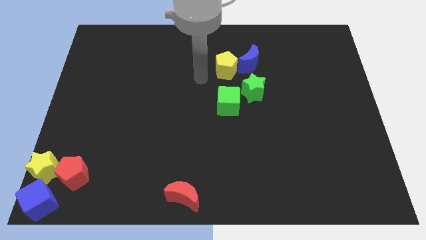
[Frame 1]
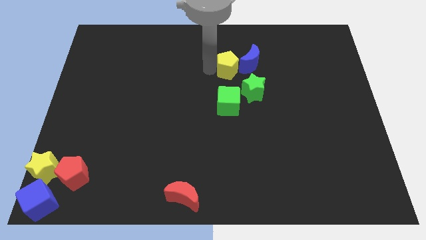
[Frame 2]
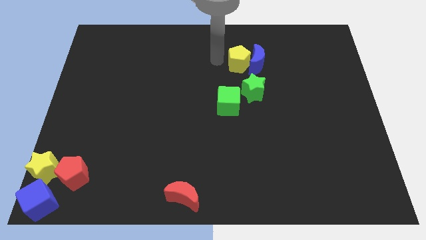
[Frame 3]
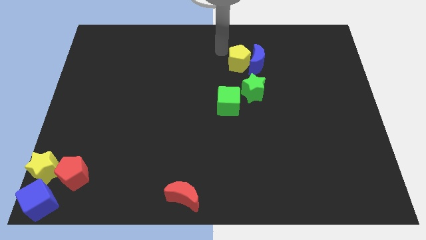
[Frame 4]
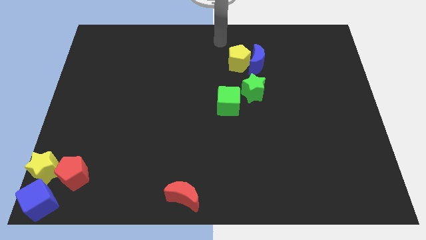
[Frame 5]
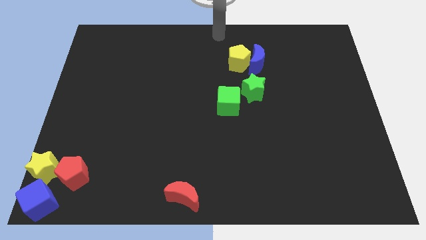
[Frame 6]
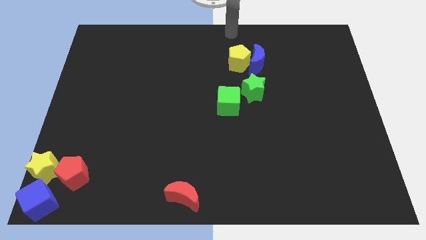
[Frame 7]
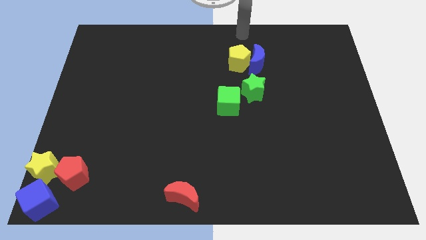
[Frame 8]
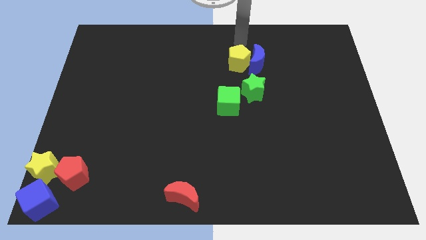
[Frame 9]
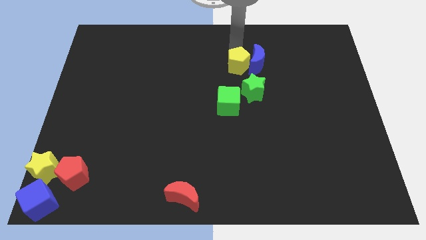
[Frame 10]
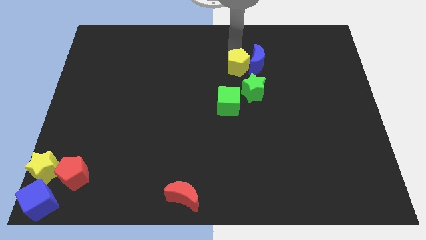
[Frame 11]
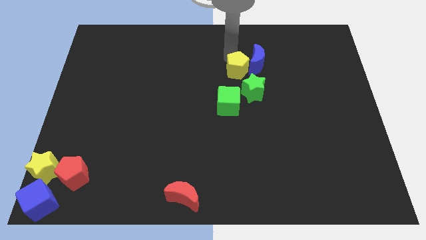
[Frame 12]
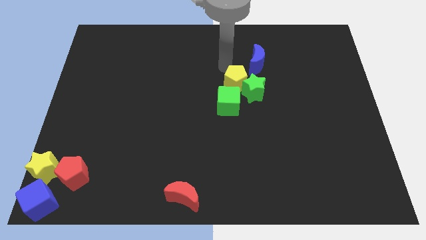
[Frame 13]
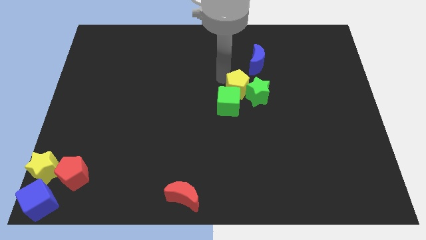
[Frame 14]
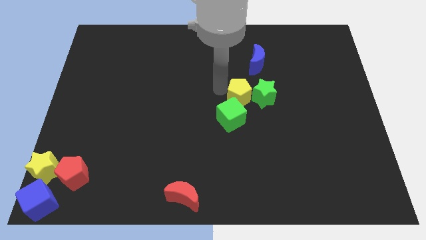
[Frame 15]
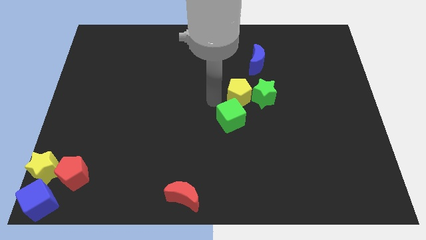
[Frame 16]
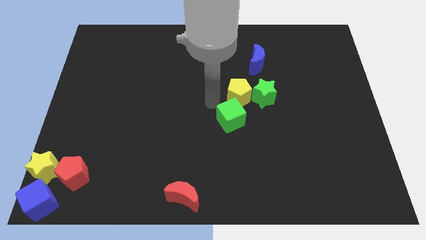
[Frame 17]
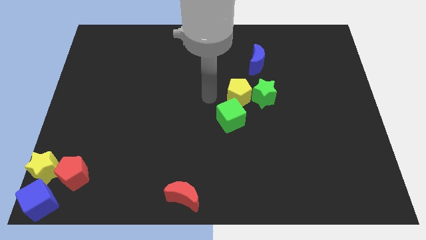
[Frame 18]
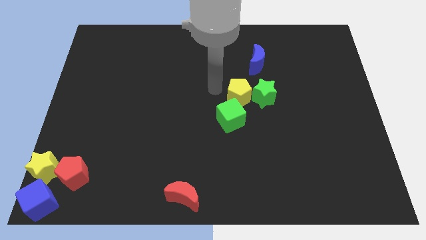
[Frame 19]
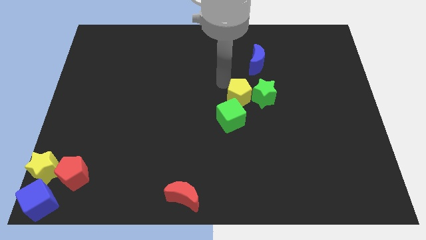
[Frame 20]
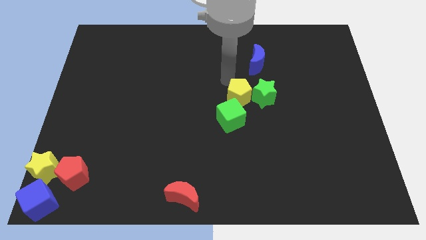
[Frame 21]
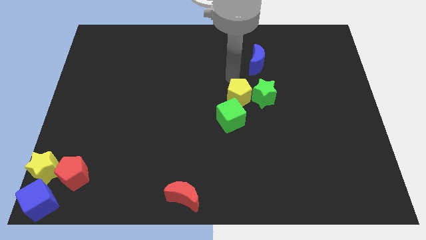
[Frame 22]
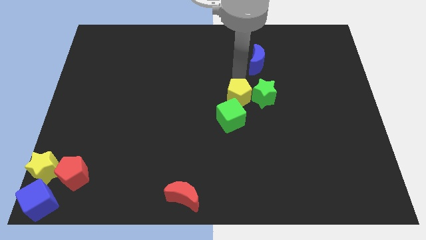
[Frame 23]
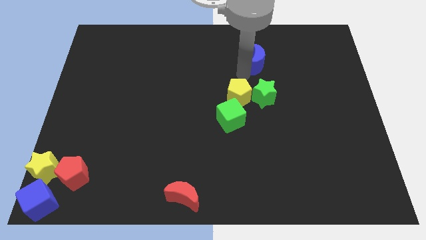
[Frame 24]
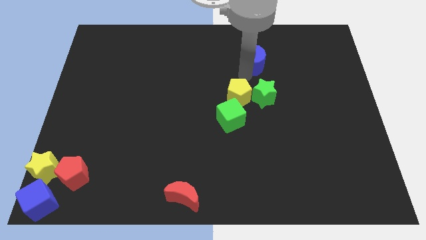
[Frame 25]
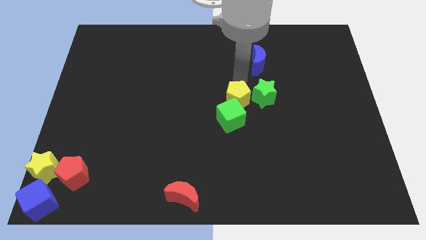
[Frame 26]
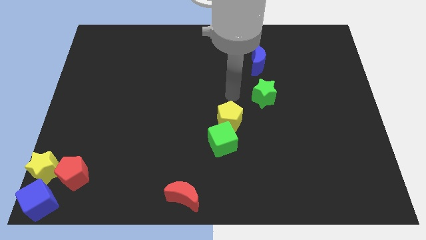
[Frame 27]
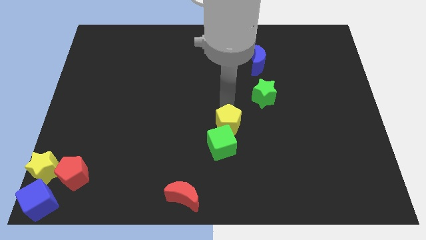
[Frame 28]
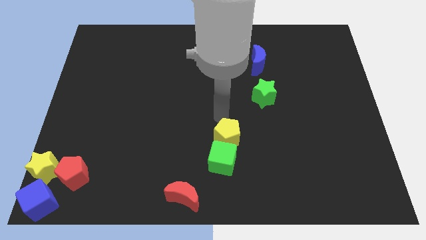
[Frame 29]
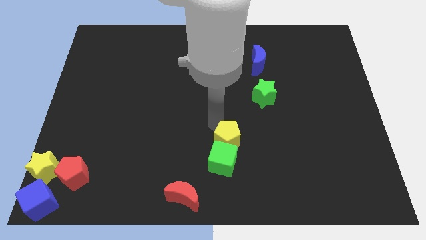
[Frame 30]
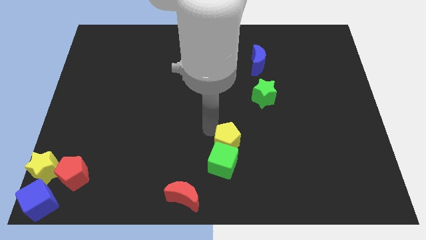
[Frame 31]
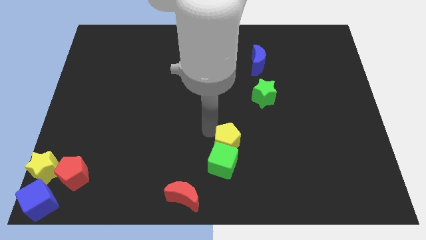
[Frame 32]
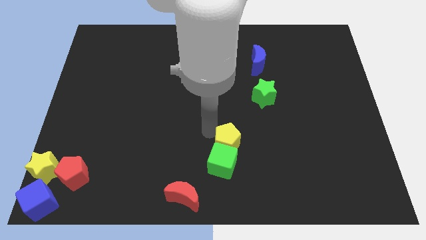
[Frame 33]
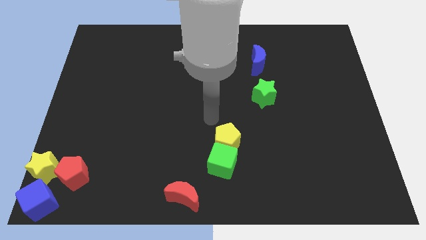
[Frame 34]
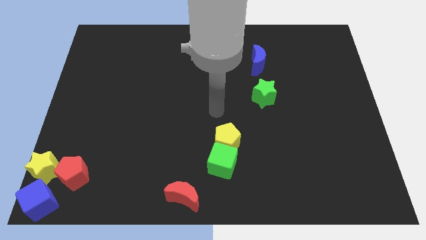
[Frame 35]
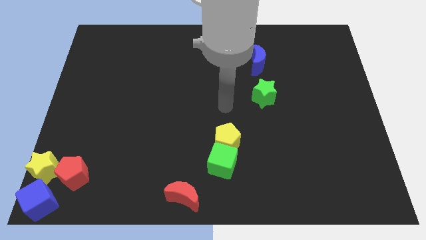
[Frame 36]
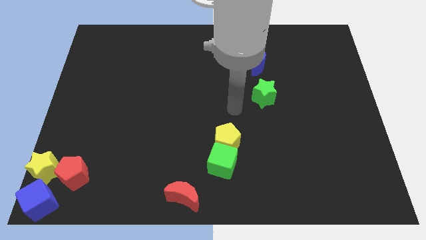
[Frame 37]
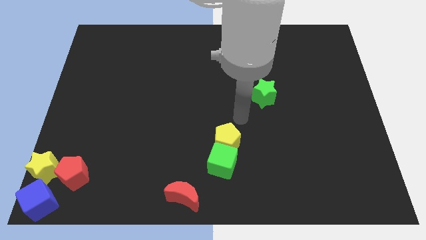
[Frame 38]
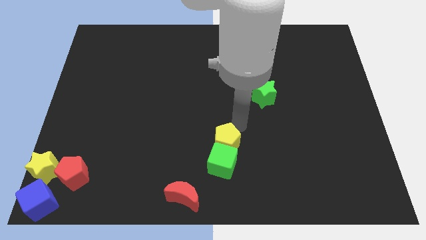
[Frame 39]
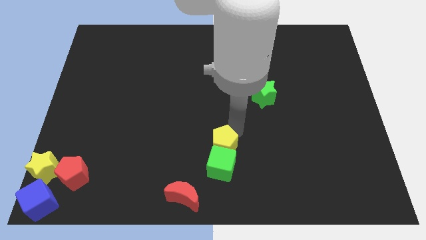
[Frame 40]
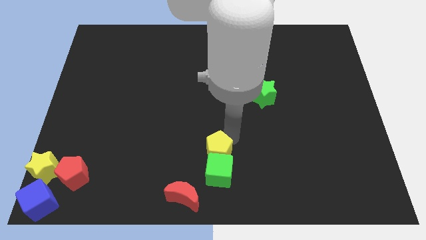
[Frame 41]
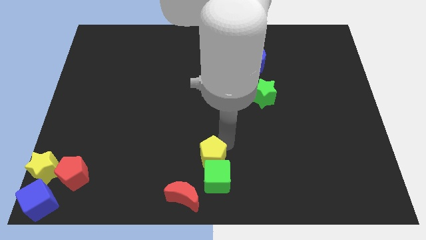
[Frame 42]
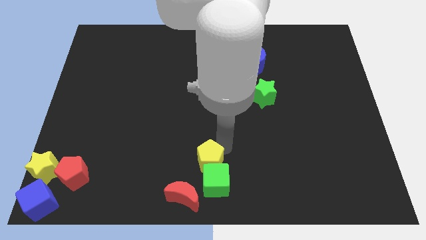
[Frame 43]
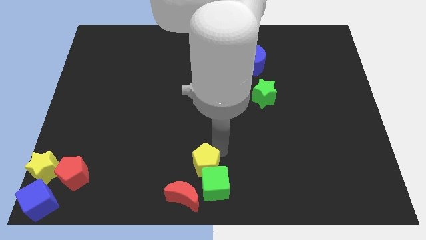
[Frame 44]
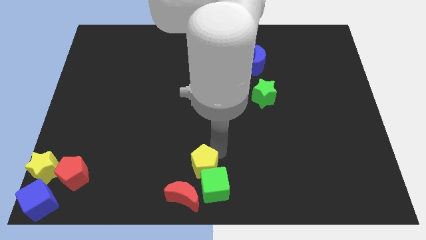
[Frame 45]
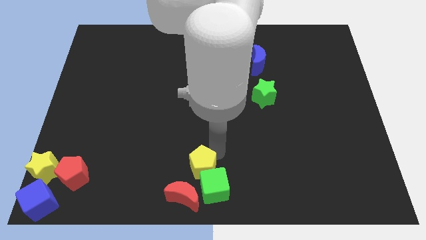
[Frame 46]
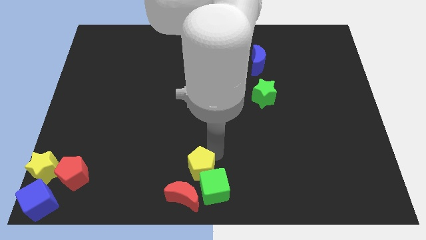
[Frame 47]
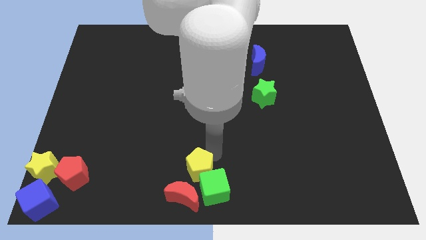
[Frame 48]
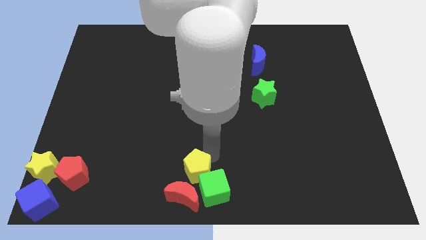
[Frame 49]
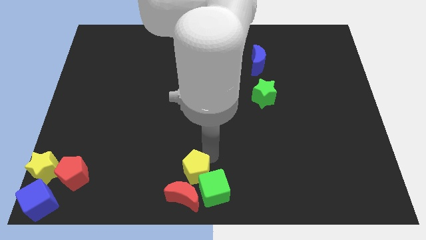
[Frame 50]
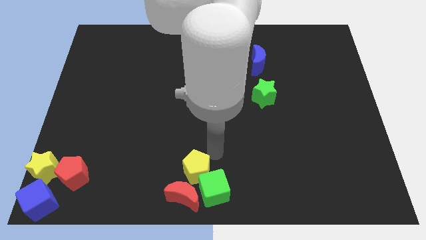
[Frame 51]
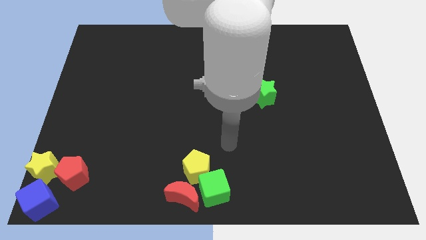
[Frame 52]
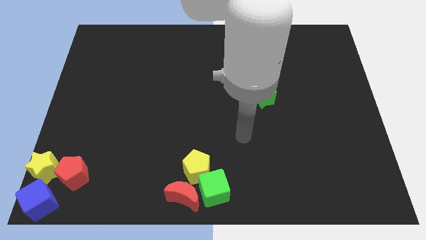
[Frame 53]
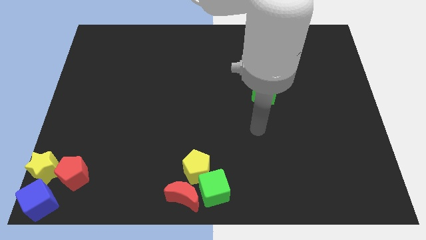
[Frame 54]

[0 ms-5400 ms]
push the green cube to the bottom center with yellow pentagon

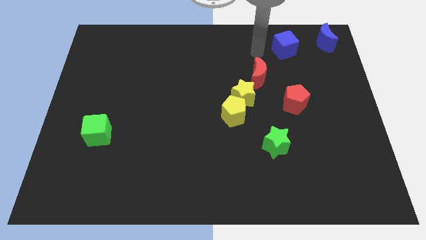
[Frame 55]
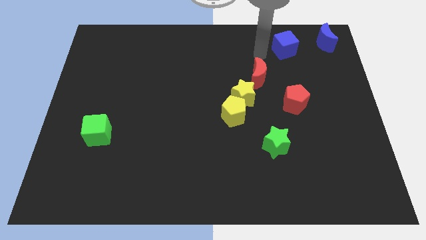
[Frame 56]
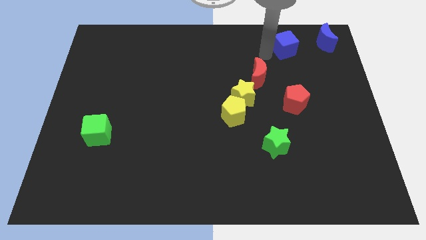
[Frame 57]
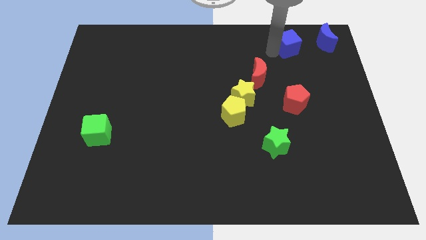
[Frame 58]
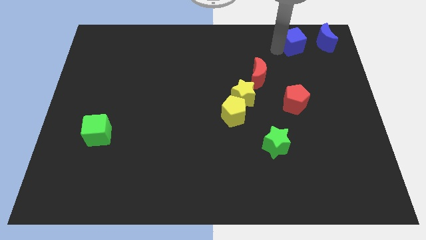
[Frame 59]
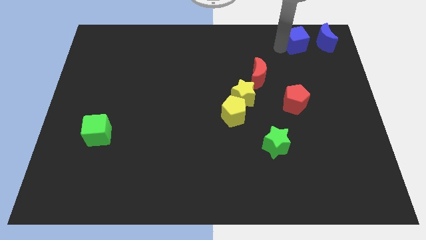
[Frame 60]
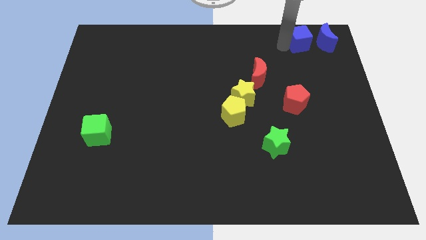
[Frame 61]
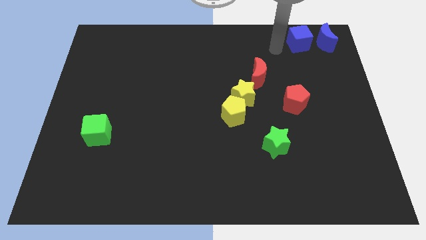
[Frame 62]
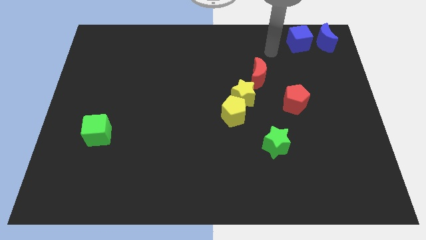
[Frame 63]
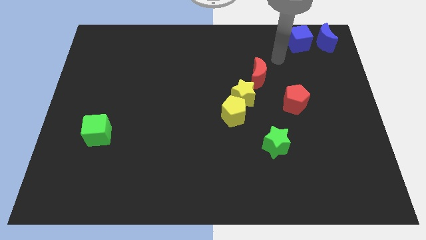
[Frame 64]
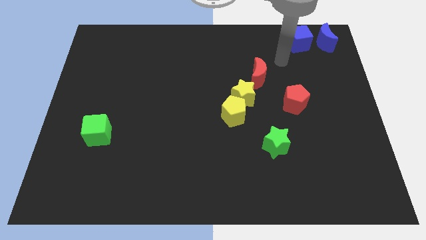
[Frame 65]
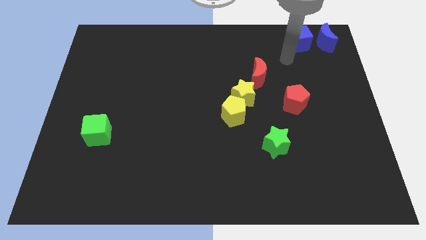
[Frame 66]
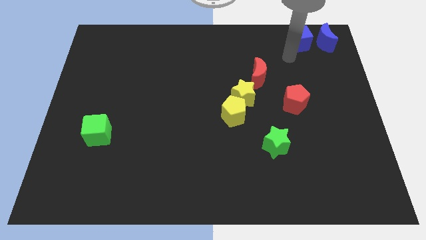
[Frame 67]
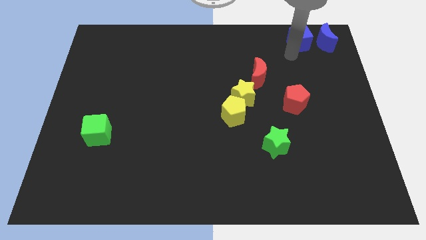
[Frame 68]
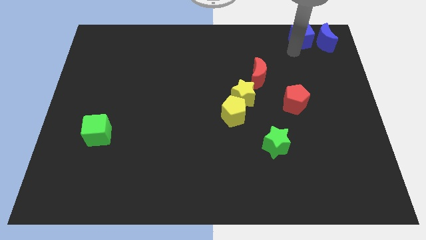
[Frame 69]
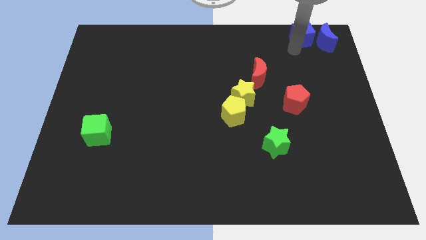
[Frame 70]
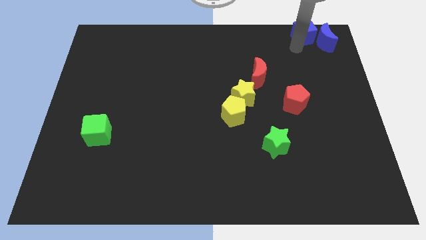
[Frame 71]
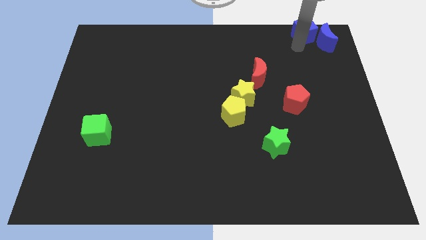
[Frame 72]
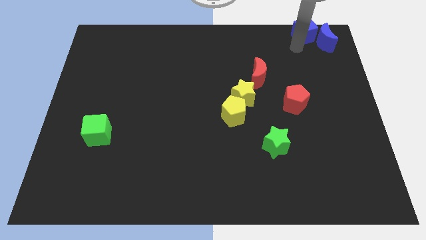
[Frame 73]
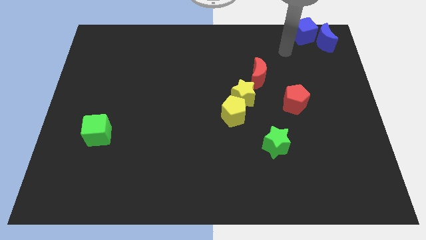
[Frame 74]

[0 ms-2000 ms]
move the blue cube close to the blue crescent

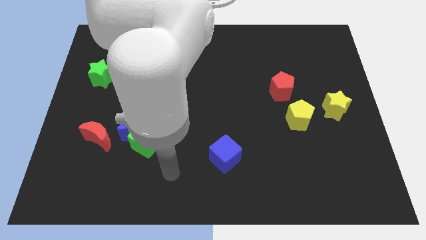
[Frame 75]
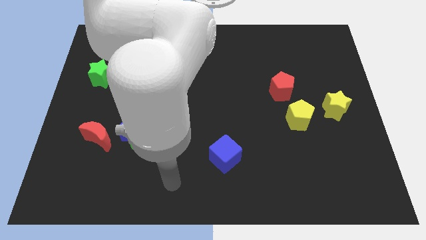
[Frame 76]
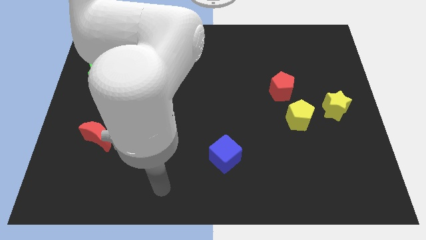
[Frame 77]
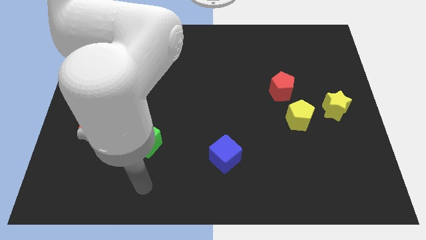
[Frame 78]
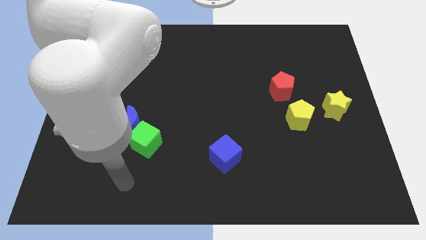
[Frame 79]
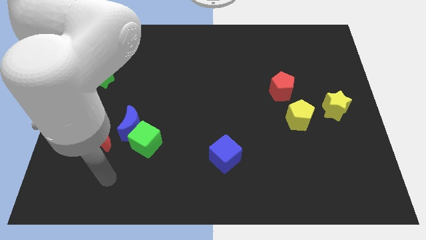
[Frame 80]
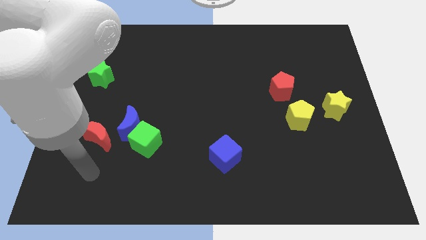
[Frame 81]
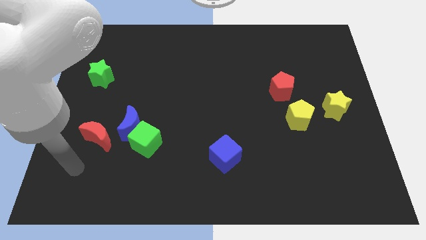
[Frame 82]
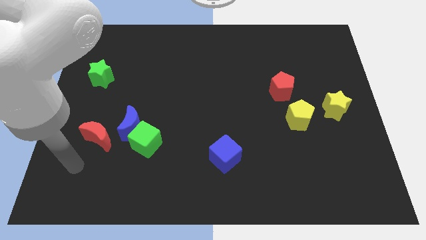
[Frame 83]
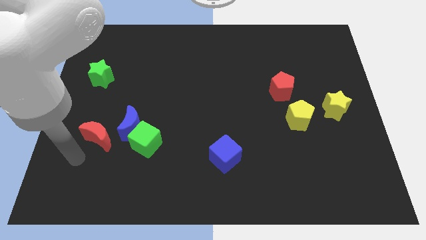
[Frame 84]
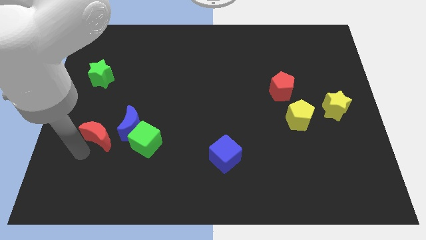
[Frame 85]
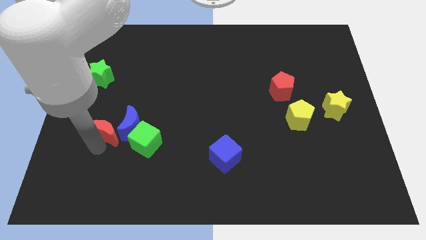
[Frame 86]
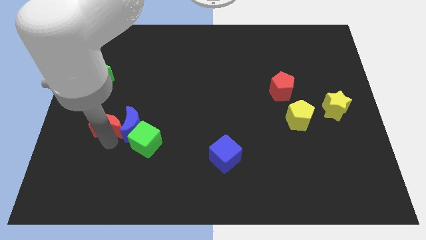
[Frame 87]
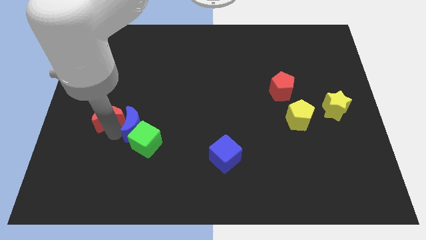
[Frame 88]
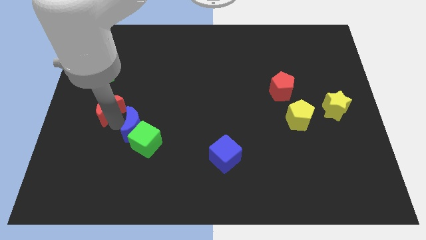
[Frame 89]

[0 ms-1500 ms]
move the red moon into the blue moon
